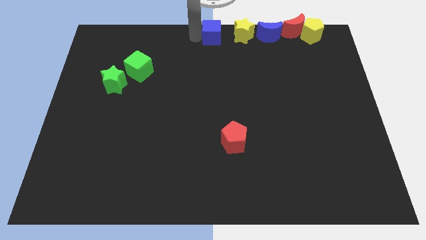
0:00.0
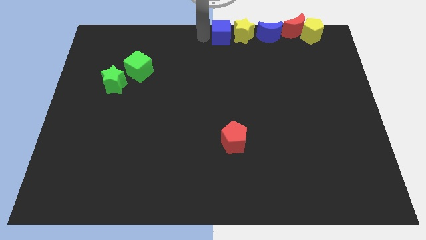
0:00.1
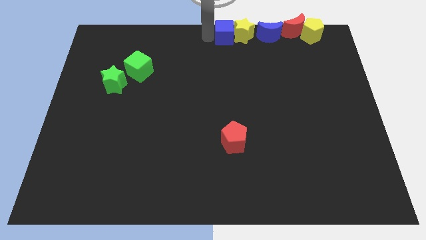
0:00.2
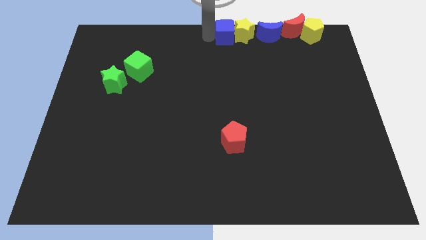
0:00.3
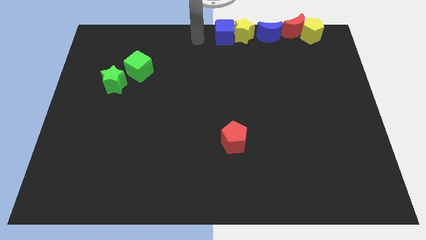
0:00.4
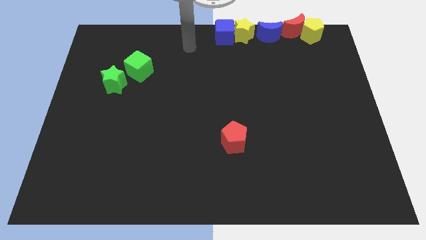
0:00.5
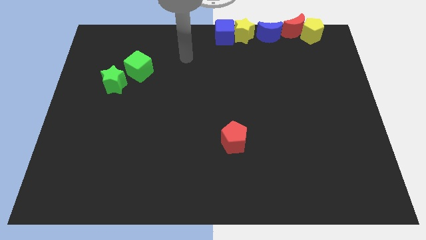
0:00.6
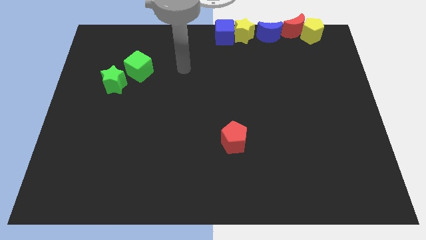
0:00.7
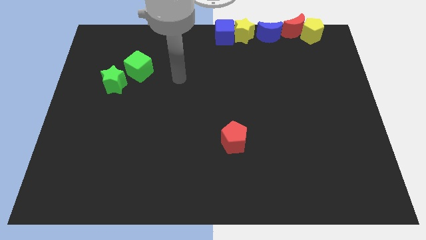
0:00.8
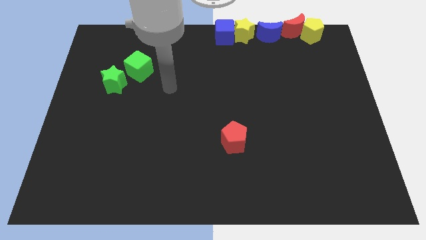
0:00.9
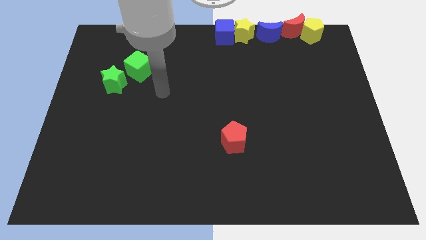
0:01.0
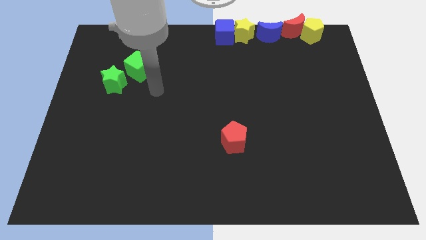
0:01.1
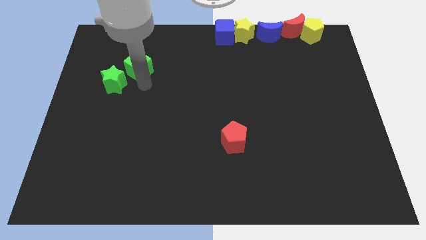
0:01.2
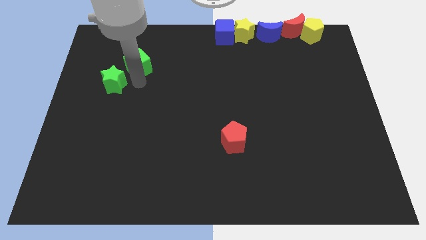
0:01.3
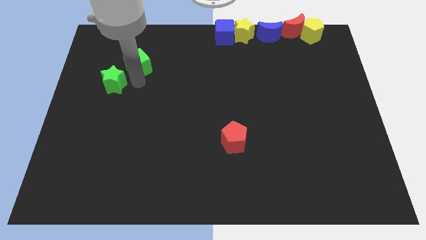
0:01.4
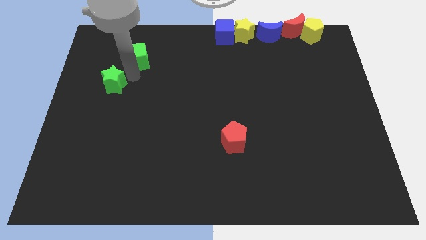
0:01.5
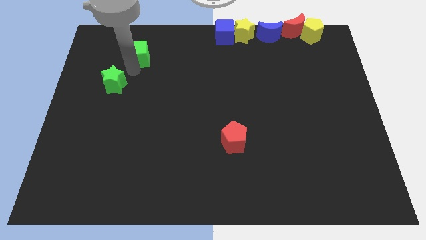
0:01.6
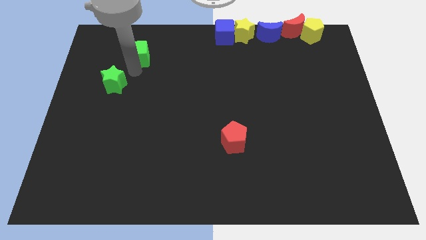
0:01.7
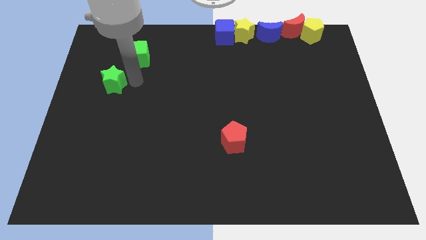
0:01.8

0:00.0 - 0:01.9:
move your arm towards the bottom of the green cube

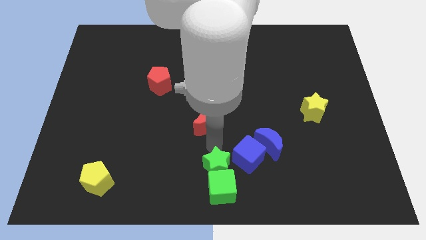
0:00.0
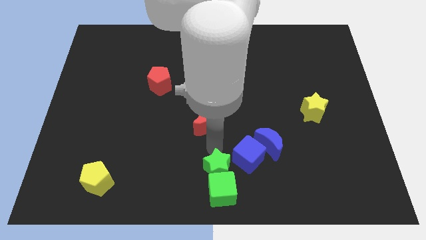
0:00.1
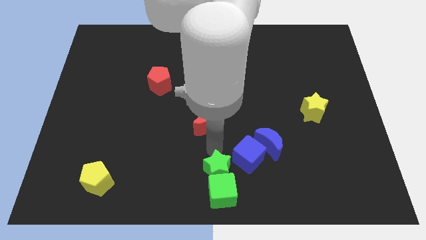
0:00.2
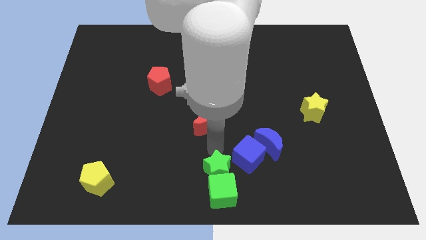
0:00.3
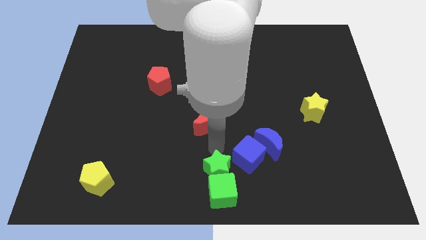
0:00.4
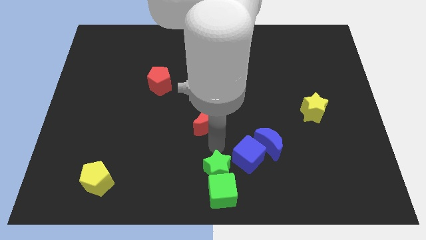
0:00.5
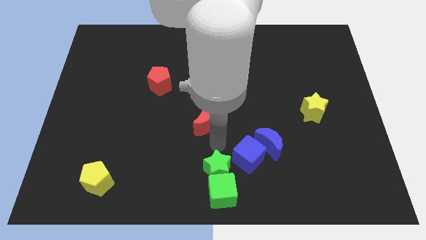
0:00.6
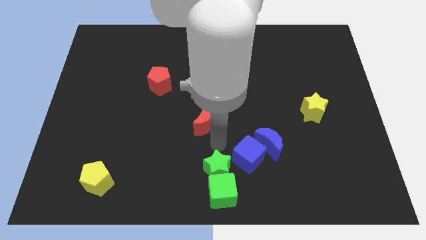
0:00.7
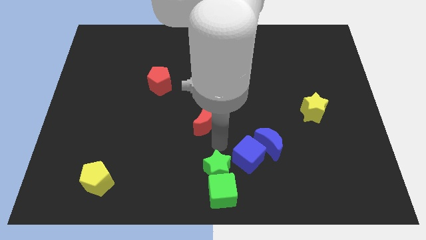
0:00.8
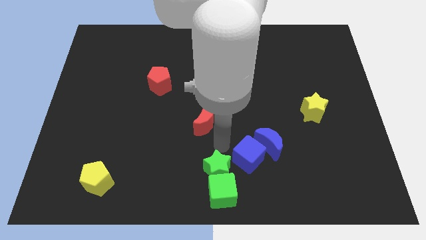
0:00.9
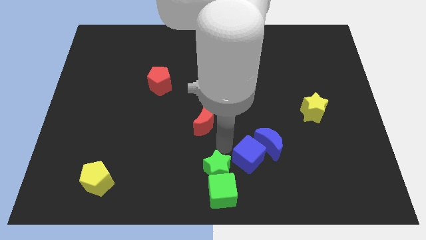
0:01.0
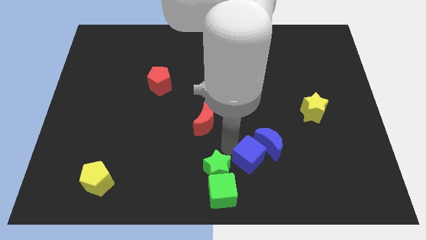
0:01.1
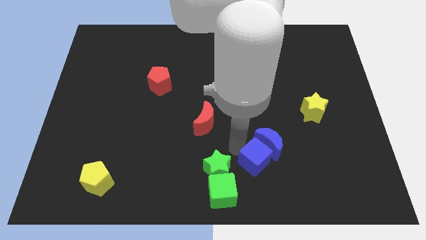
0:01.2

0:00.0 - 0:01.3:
push the green blocks to the bottom center

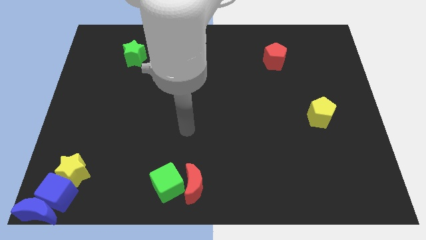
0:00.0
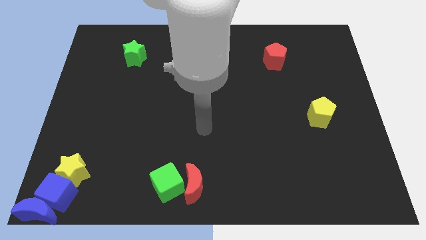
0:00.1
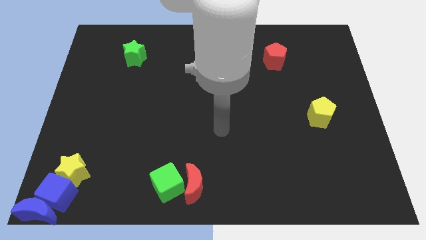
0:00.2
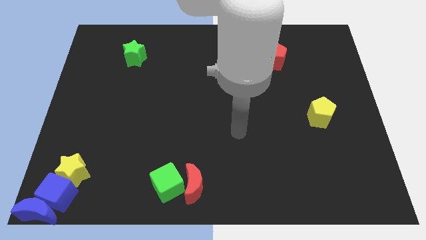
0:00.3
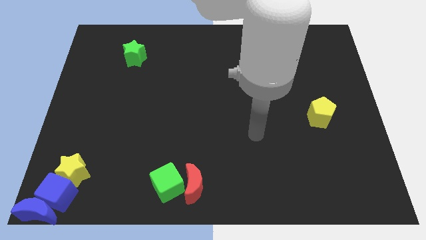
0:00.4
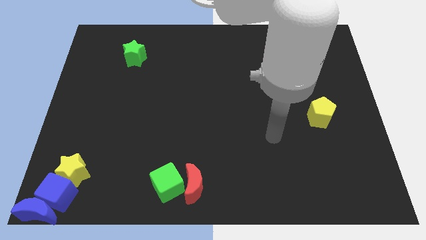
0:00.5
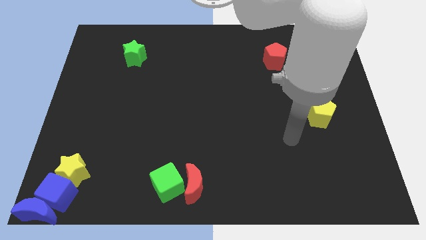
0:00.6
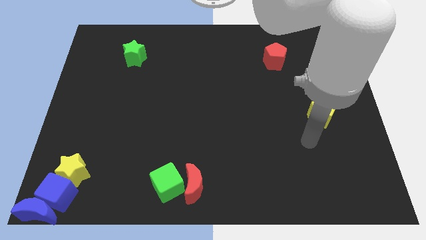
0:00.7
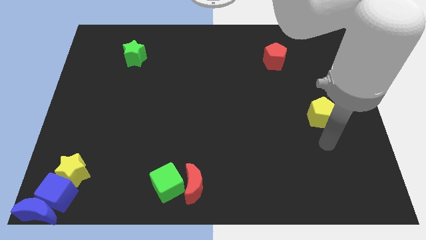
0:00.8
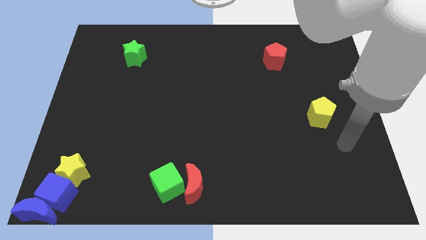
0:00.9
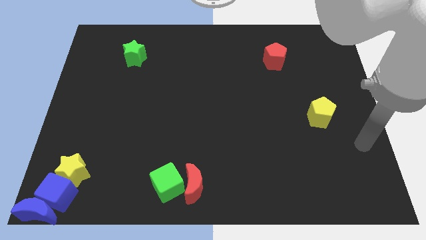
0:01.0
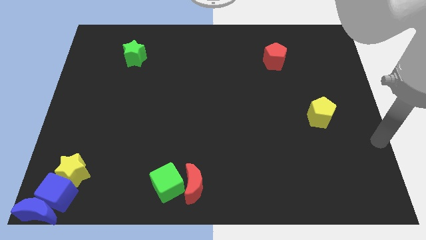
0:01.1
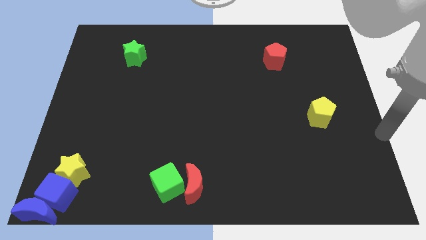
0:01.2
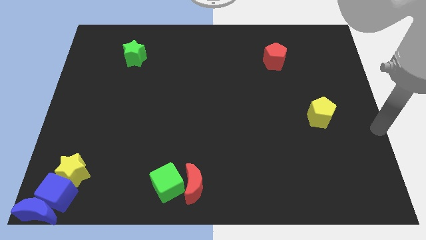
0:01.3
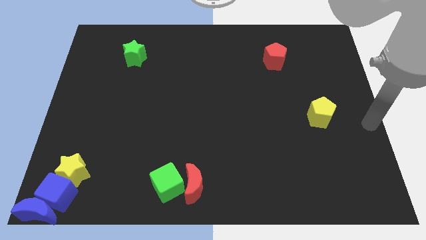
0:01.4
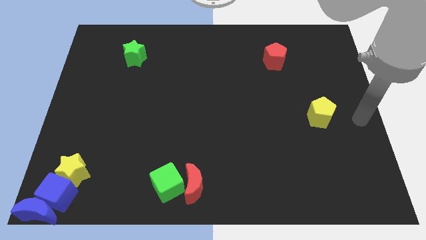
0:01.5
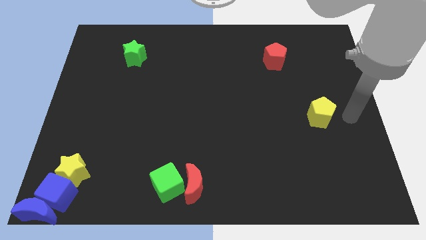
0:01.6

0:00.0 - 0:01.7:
point your arm to the right of the yellow pentagon

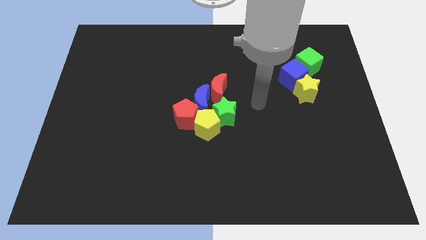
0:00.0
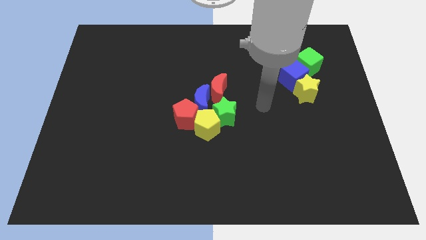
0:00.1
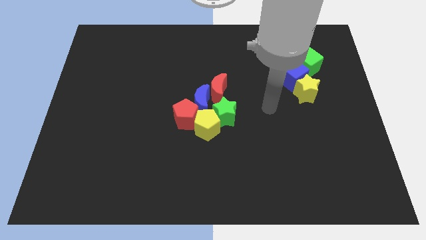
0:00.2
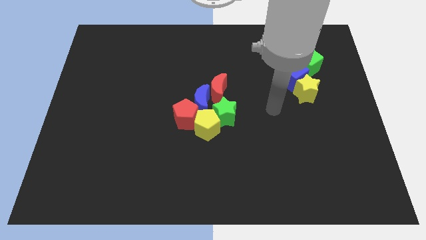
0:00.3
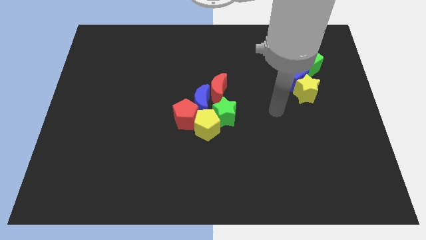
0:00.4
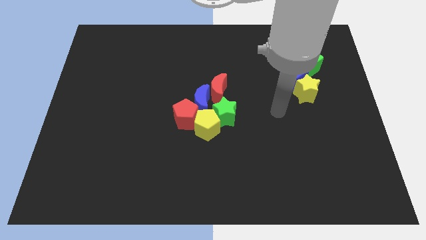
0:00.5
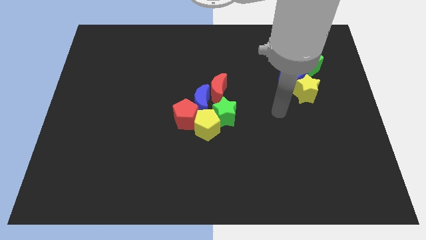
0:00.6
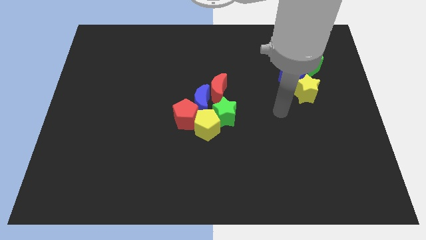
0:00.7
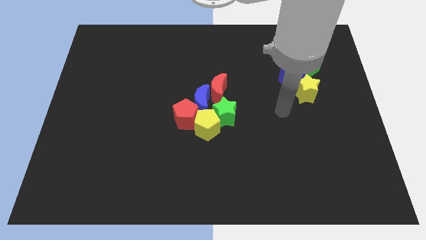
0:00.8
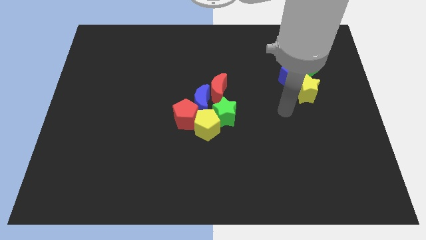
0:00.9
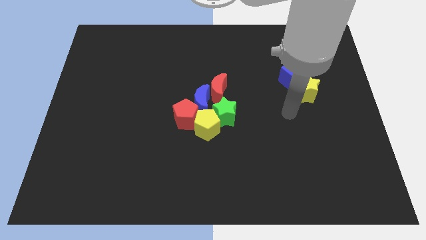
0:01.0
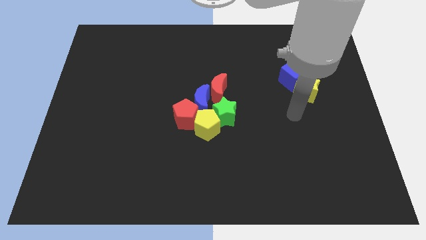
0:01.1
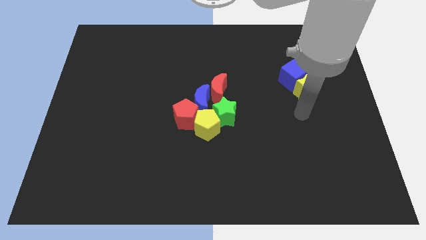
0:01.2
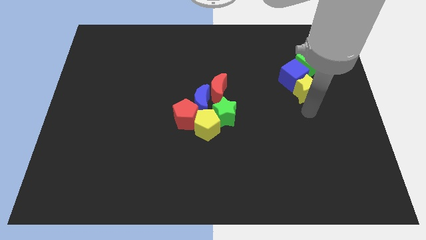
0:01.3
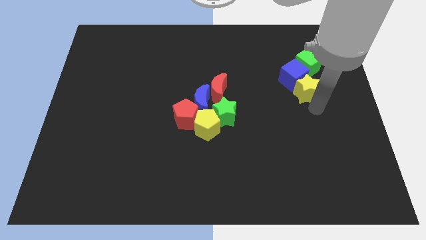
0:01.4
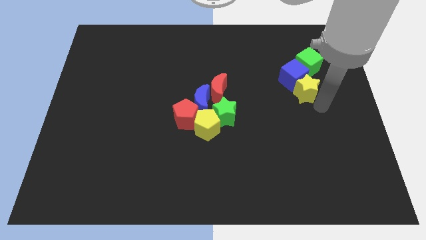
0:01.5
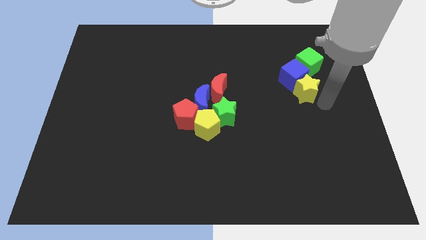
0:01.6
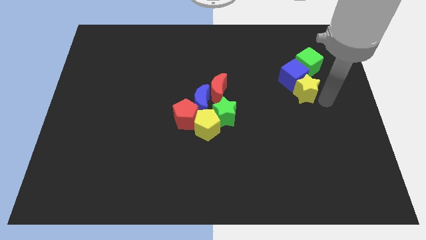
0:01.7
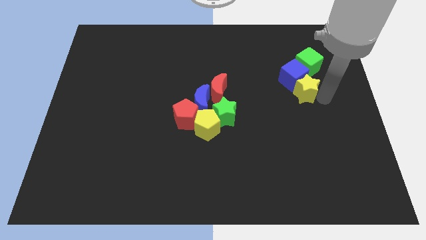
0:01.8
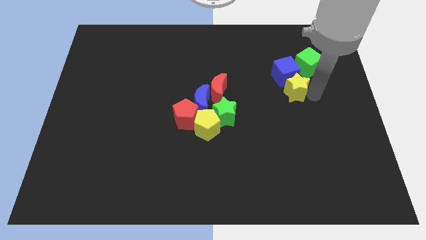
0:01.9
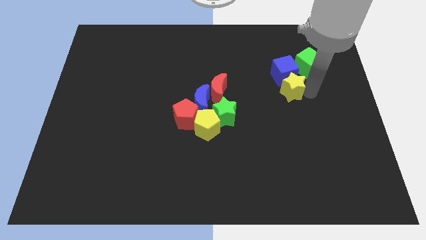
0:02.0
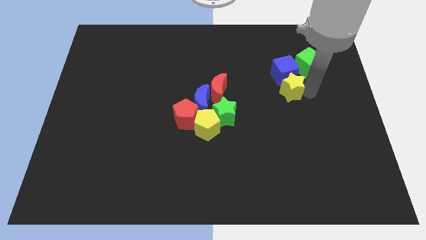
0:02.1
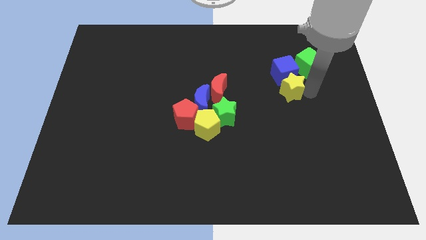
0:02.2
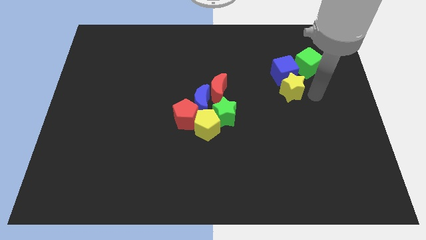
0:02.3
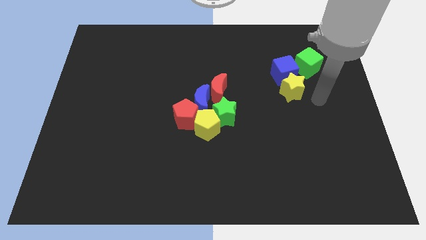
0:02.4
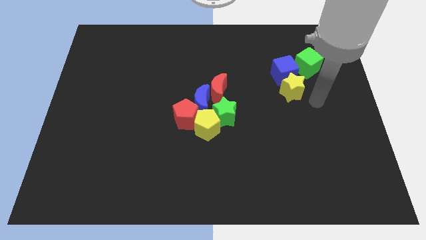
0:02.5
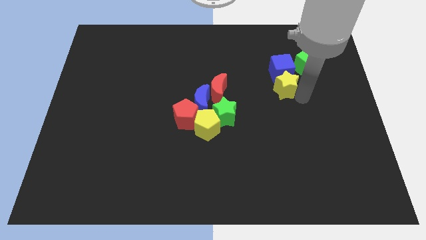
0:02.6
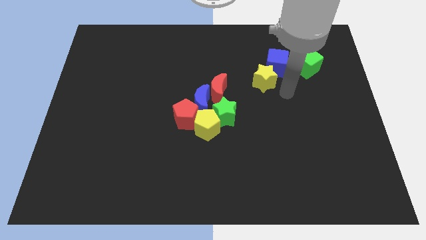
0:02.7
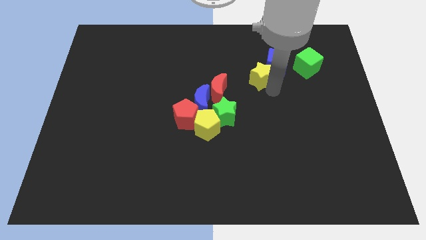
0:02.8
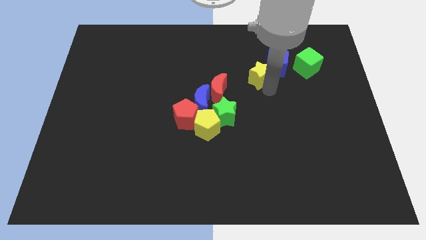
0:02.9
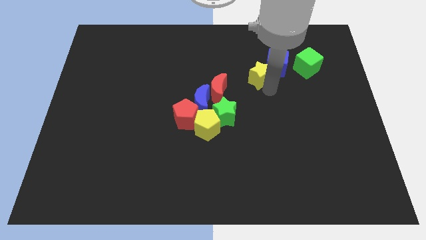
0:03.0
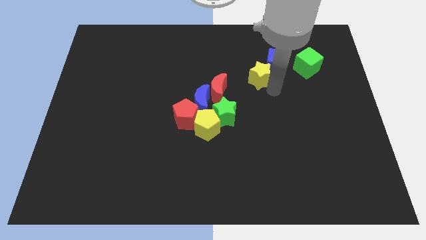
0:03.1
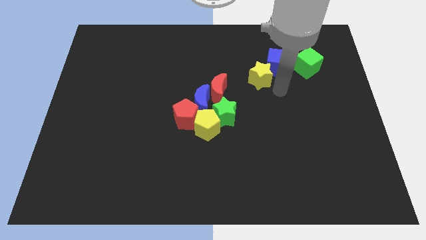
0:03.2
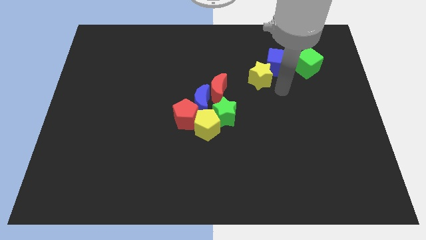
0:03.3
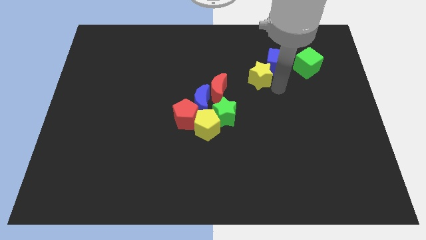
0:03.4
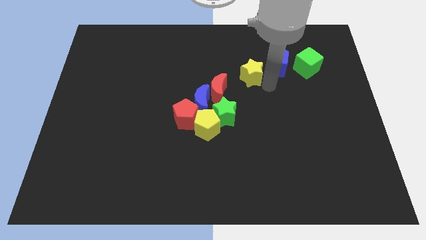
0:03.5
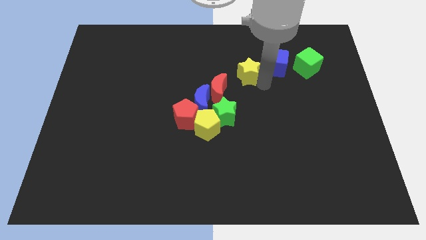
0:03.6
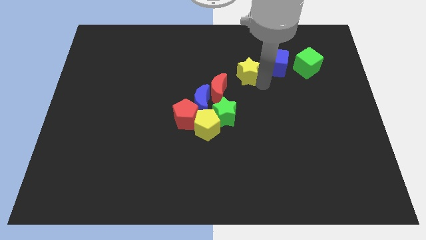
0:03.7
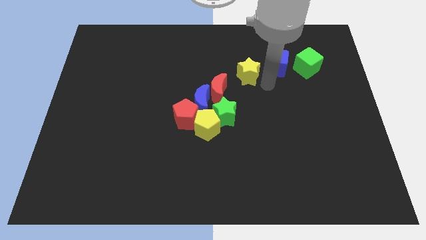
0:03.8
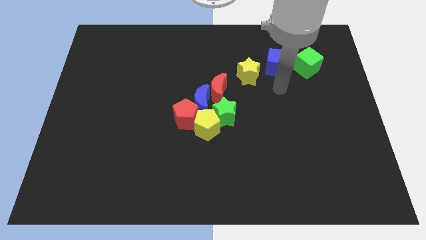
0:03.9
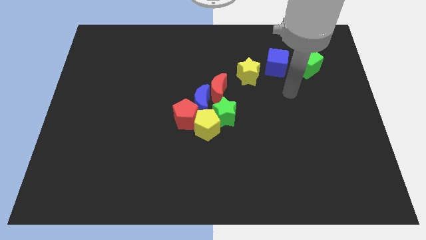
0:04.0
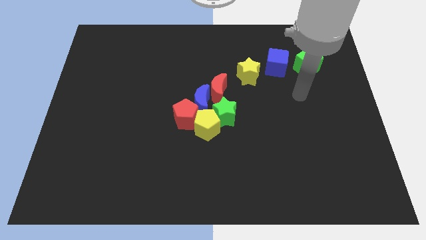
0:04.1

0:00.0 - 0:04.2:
place the yellow star to the top right of the red moon
